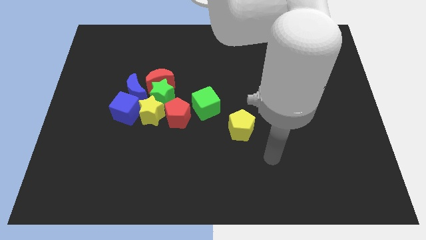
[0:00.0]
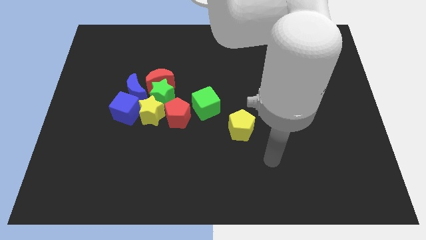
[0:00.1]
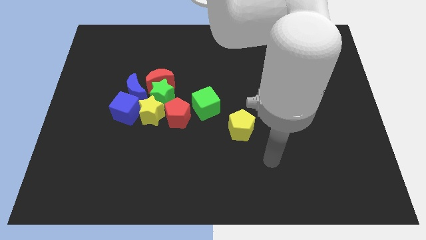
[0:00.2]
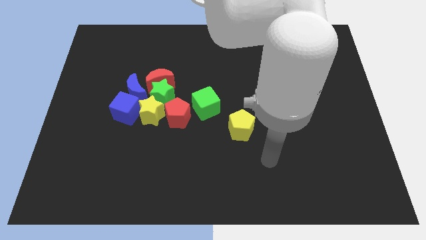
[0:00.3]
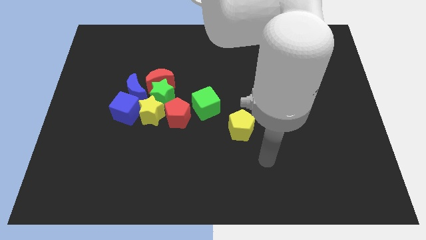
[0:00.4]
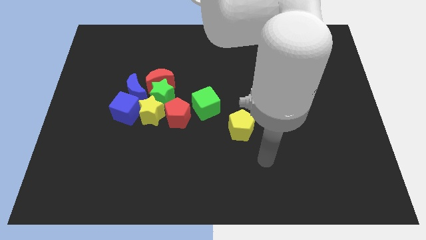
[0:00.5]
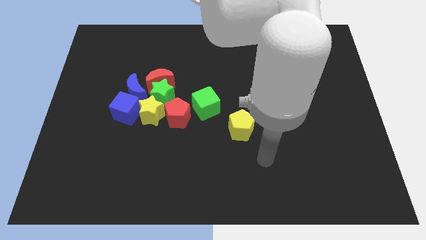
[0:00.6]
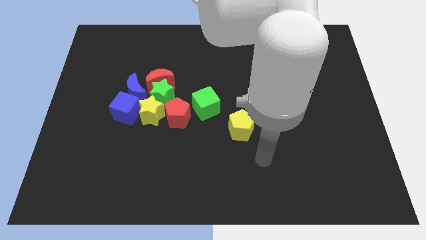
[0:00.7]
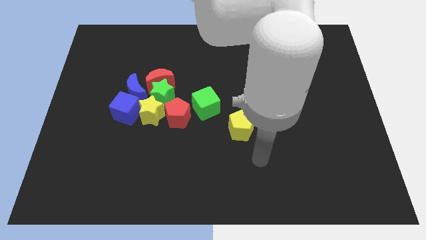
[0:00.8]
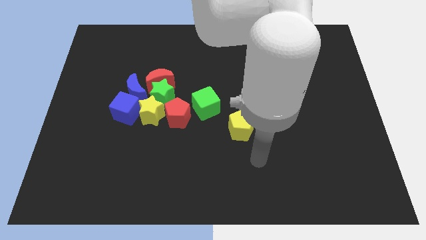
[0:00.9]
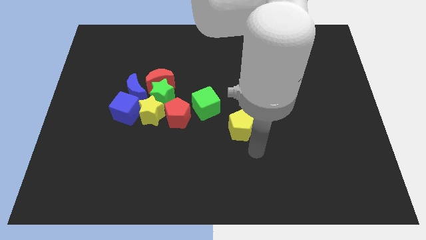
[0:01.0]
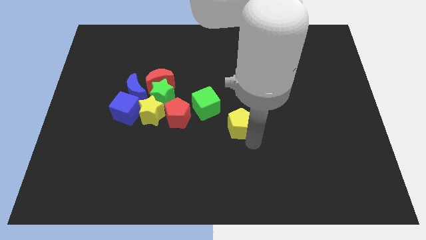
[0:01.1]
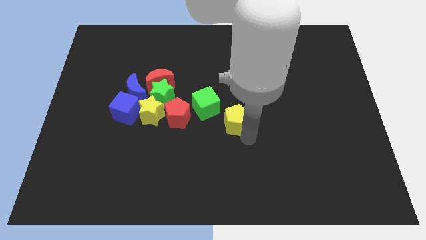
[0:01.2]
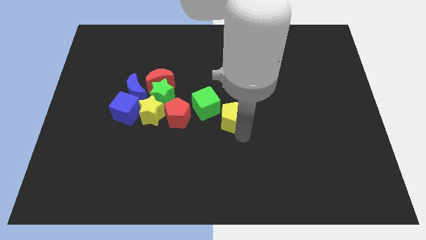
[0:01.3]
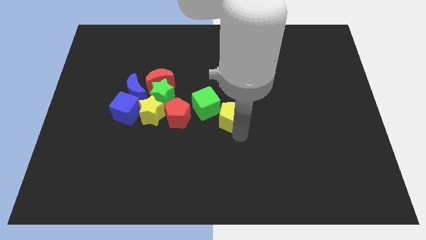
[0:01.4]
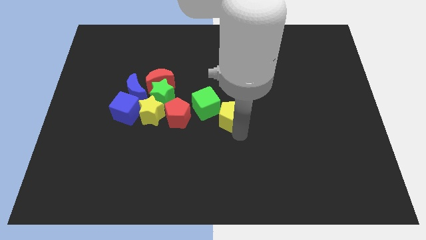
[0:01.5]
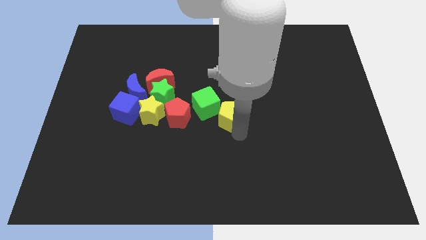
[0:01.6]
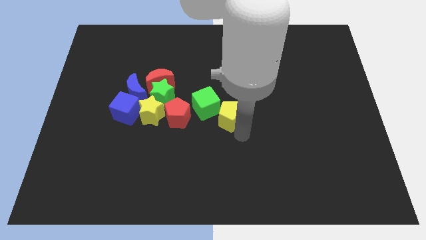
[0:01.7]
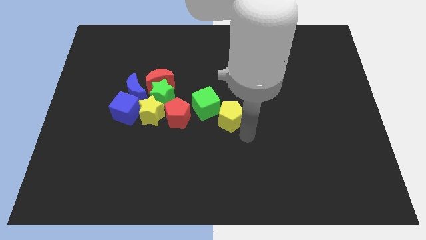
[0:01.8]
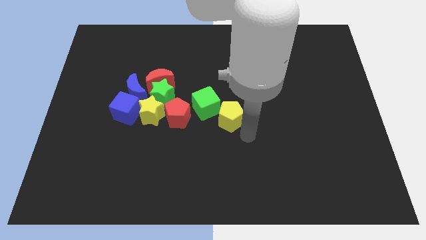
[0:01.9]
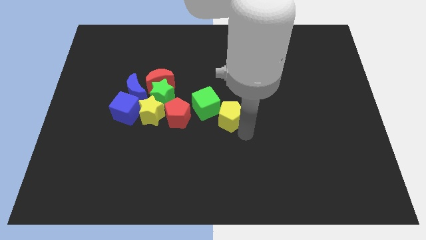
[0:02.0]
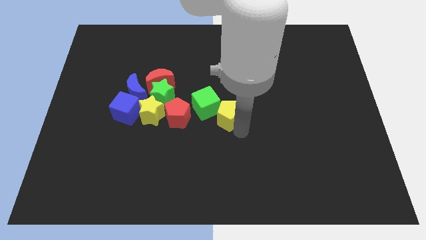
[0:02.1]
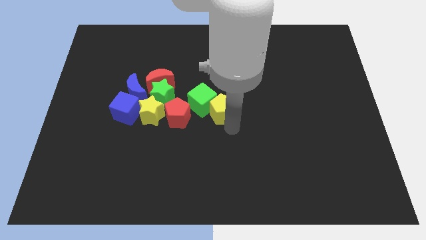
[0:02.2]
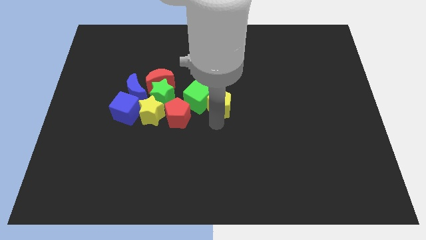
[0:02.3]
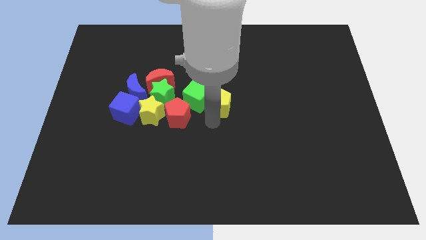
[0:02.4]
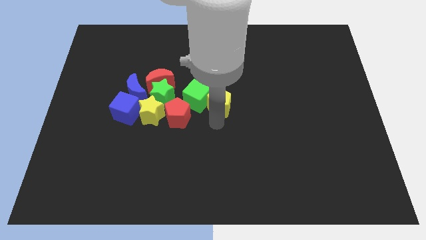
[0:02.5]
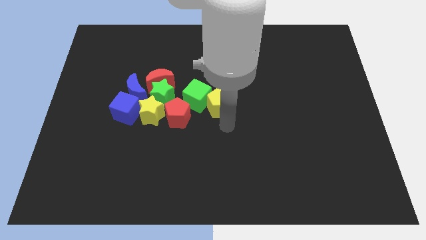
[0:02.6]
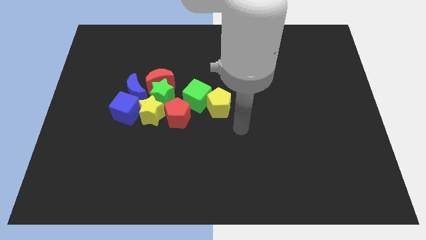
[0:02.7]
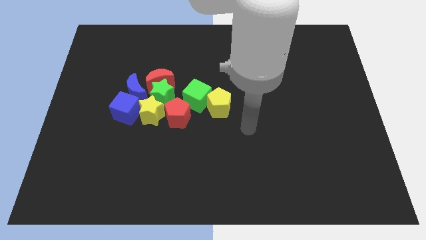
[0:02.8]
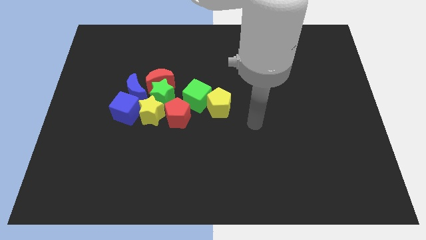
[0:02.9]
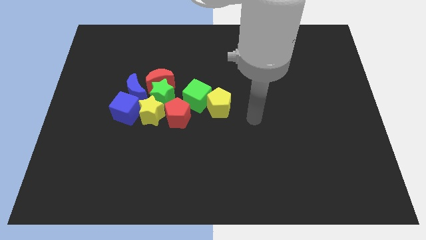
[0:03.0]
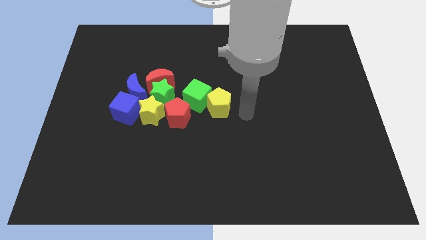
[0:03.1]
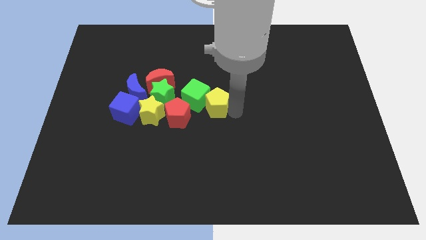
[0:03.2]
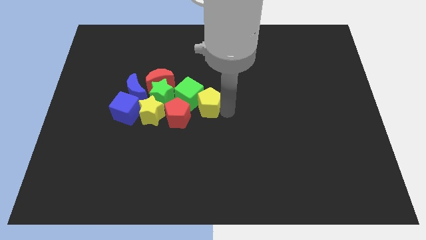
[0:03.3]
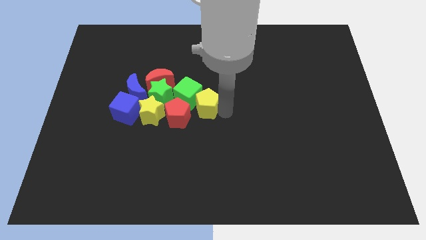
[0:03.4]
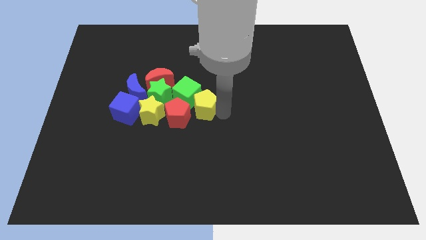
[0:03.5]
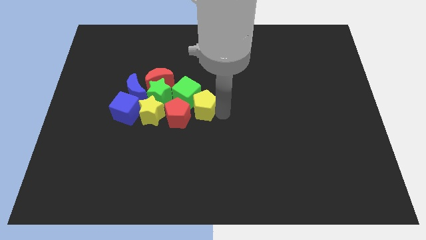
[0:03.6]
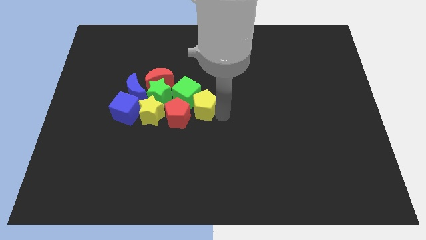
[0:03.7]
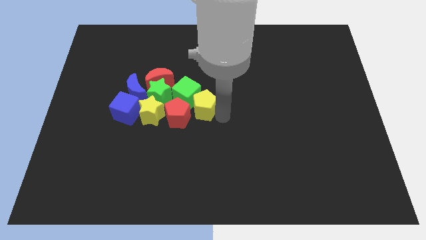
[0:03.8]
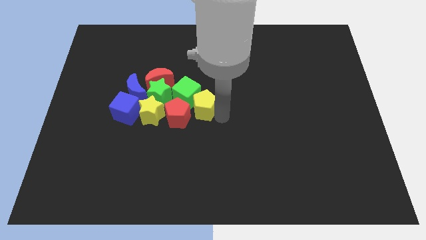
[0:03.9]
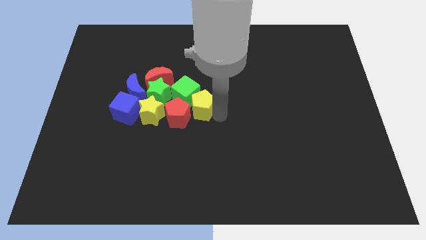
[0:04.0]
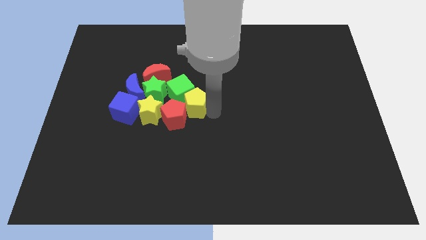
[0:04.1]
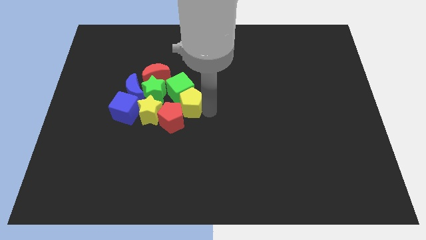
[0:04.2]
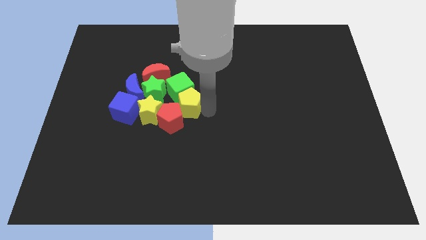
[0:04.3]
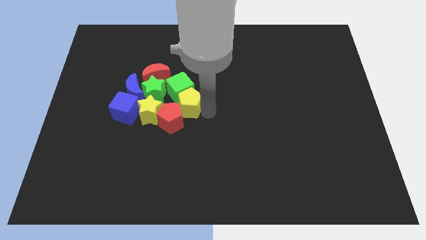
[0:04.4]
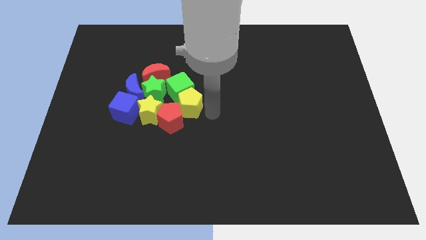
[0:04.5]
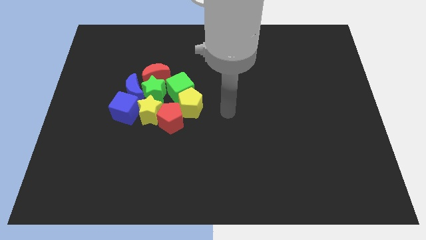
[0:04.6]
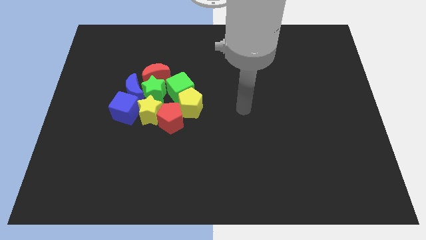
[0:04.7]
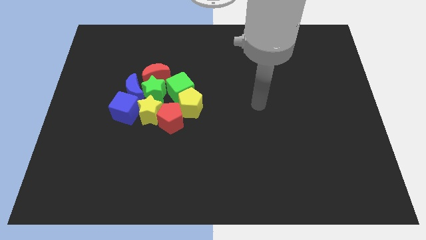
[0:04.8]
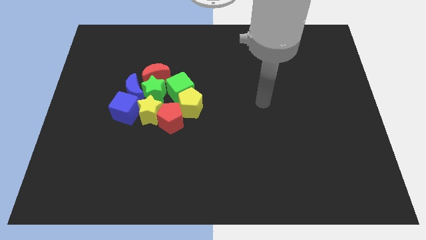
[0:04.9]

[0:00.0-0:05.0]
push the yellow pentagon into the green cube

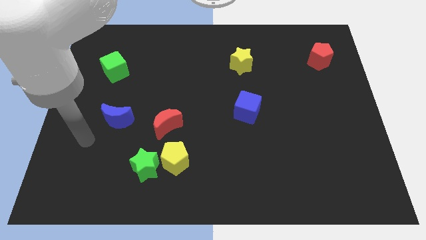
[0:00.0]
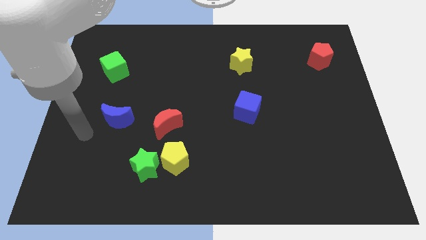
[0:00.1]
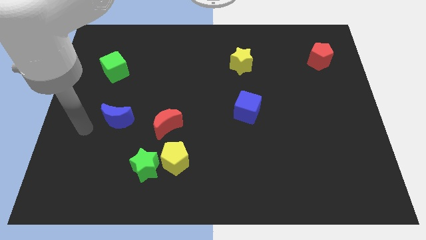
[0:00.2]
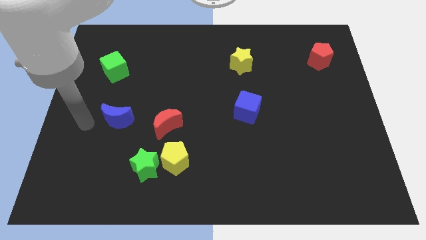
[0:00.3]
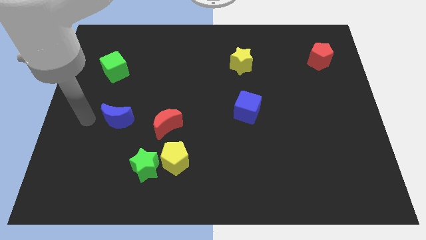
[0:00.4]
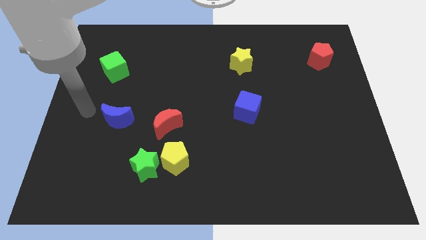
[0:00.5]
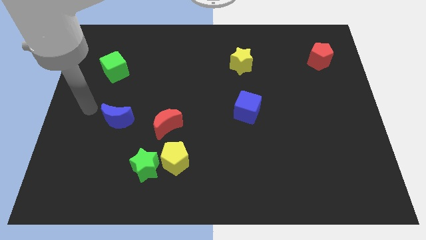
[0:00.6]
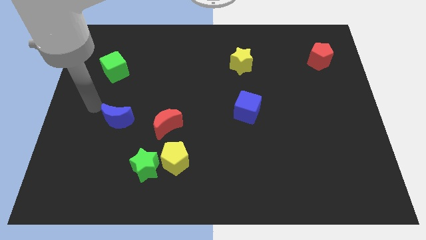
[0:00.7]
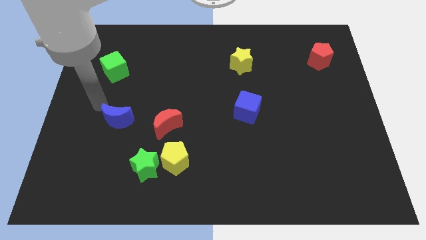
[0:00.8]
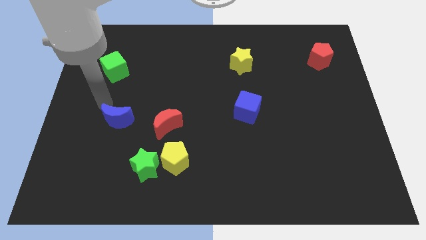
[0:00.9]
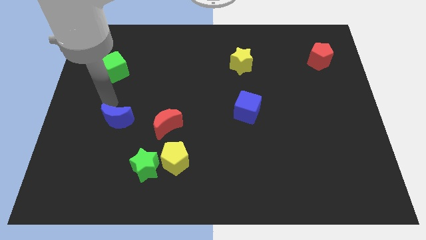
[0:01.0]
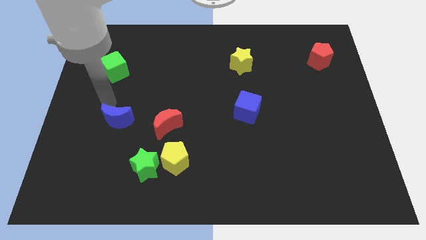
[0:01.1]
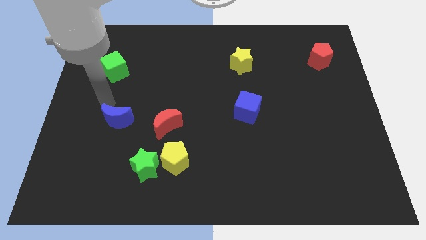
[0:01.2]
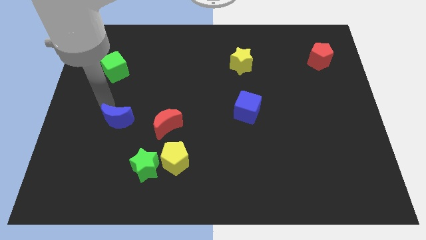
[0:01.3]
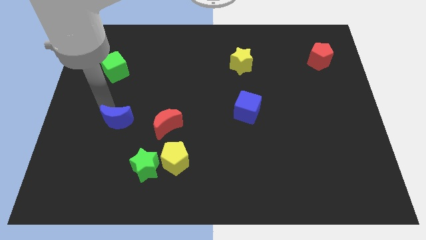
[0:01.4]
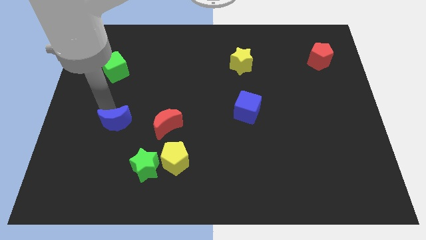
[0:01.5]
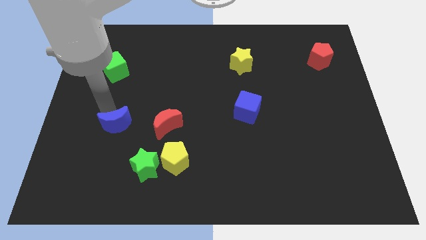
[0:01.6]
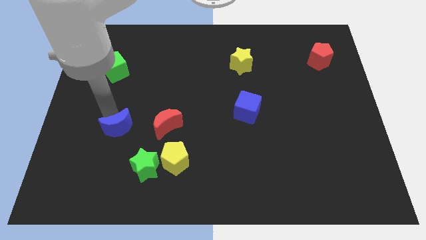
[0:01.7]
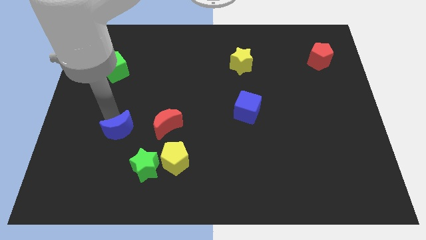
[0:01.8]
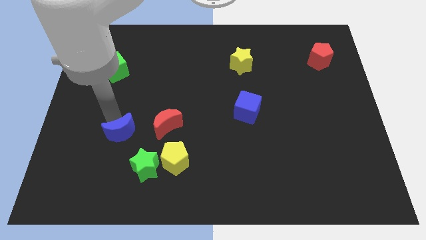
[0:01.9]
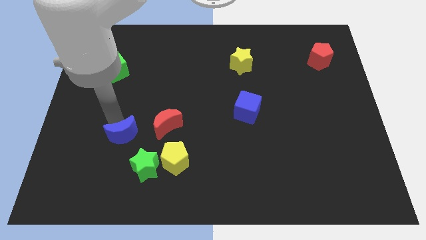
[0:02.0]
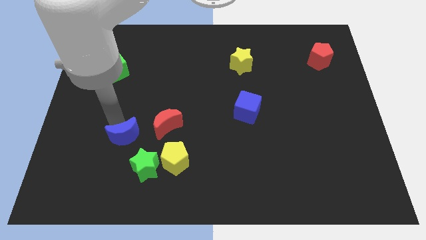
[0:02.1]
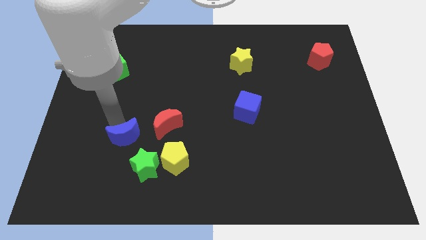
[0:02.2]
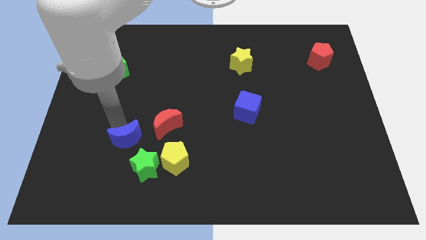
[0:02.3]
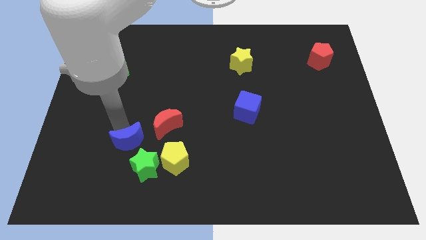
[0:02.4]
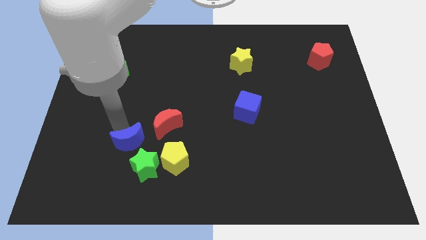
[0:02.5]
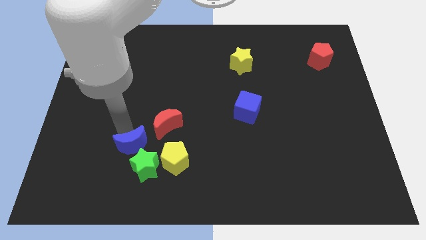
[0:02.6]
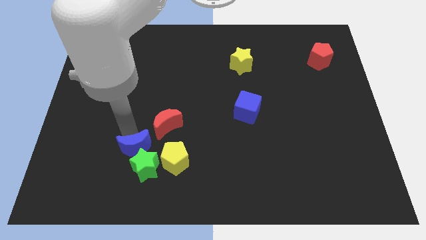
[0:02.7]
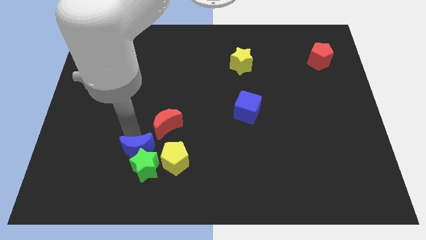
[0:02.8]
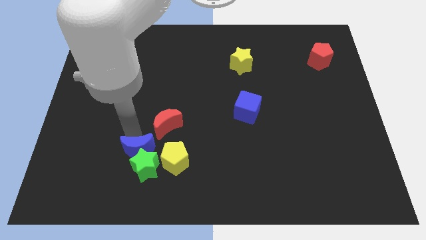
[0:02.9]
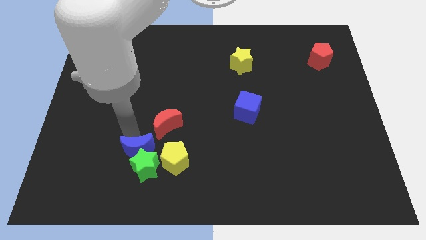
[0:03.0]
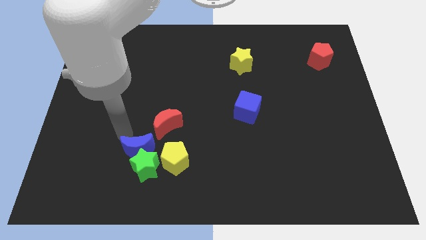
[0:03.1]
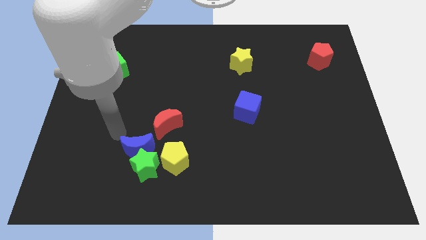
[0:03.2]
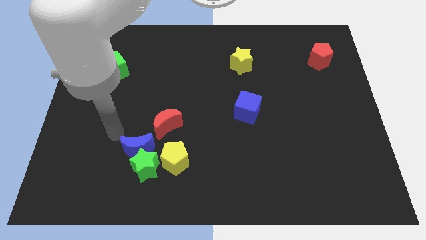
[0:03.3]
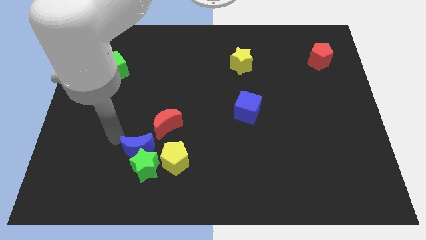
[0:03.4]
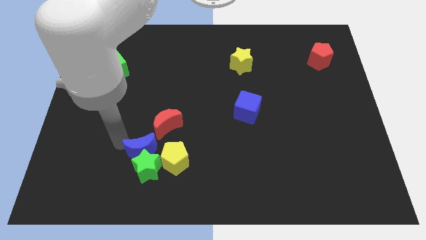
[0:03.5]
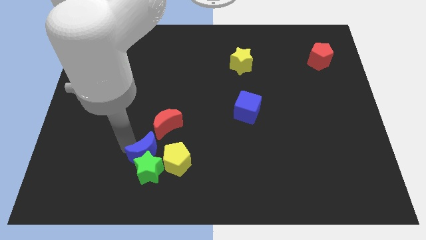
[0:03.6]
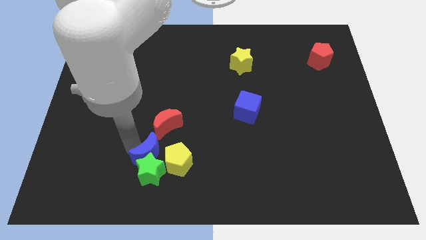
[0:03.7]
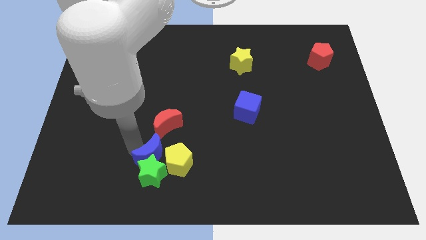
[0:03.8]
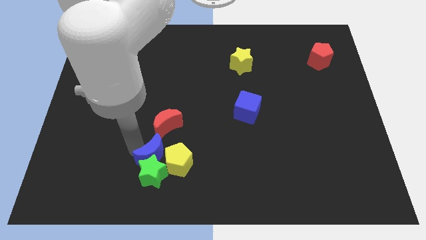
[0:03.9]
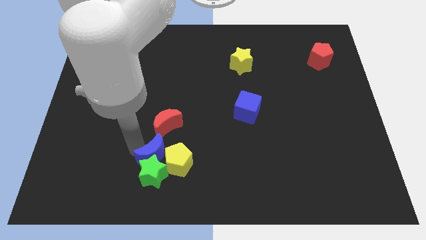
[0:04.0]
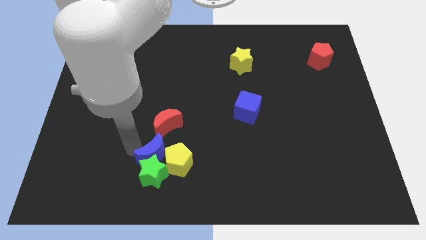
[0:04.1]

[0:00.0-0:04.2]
push the blue moon into the green star
